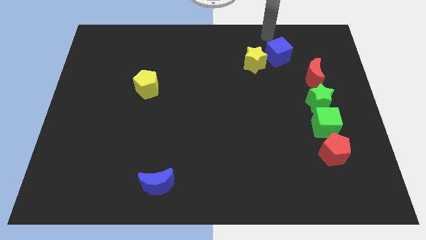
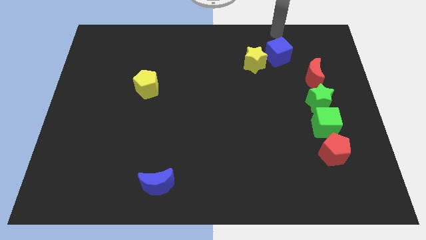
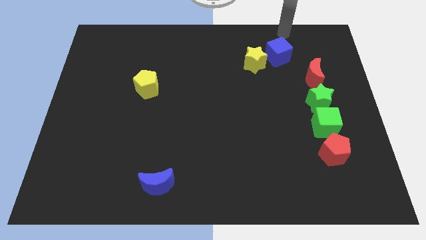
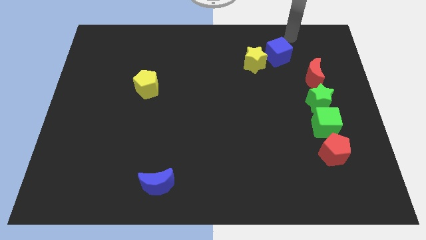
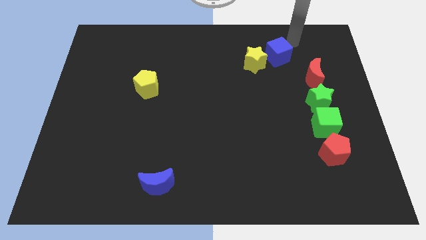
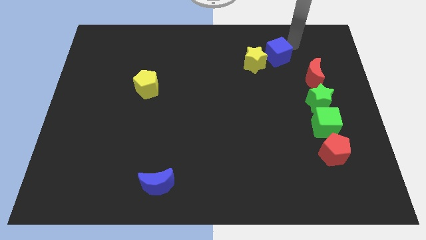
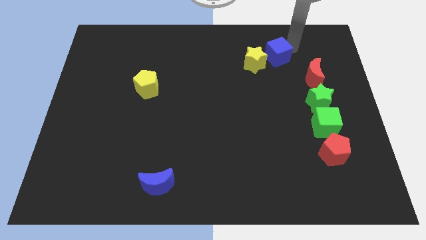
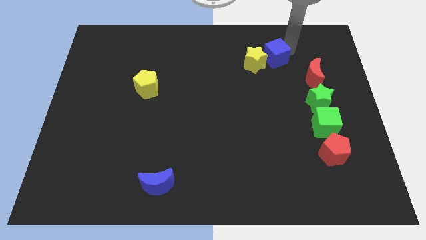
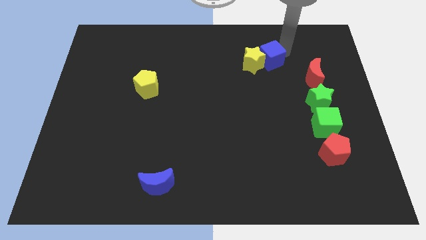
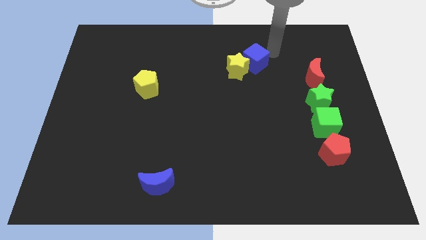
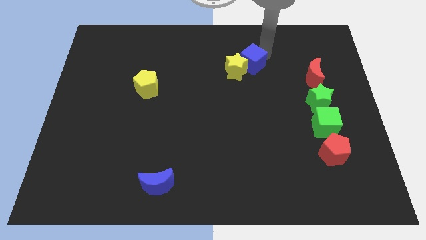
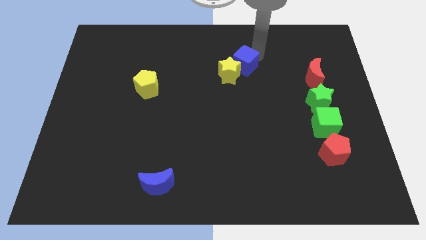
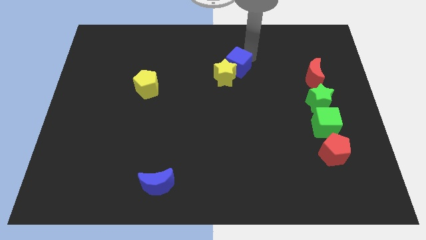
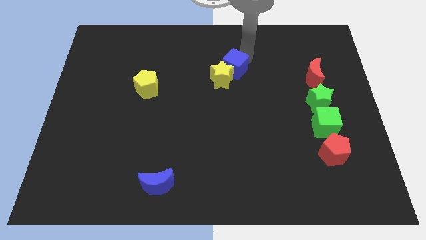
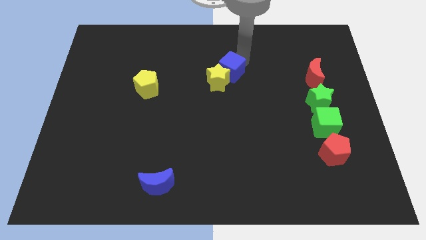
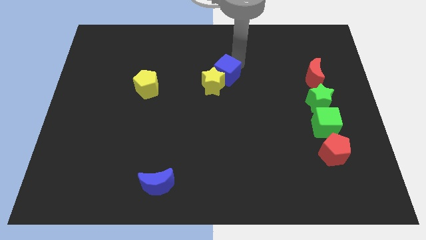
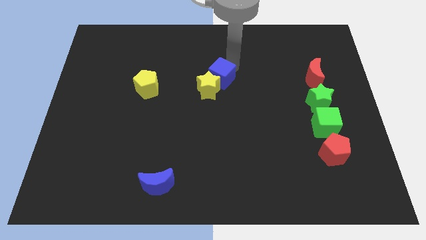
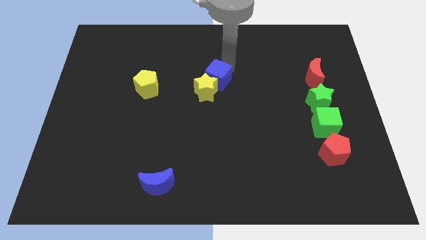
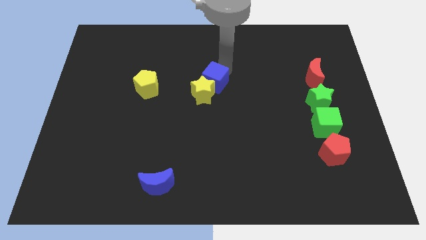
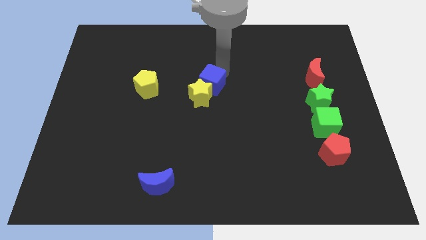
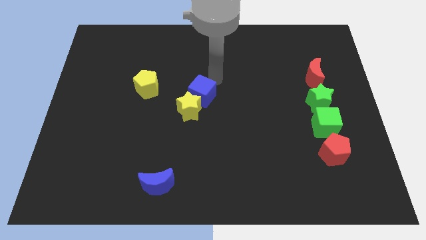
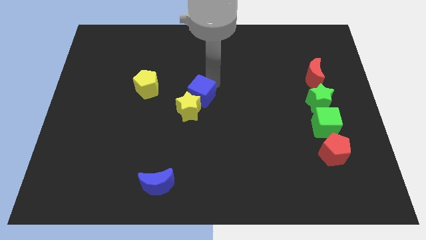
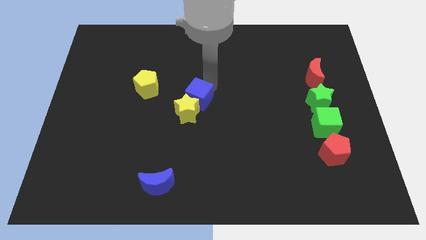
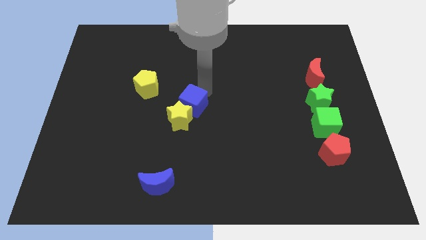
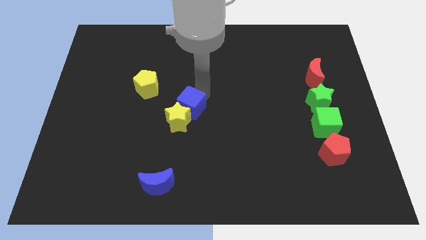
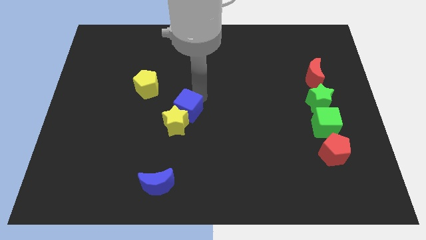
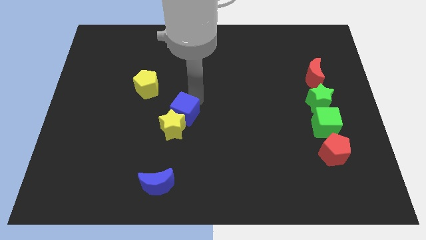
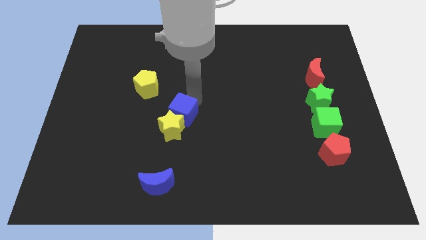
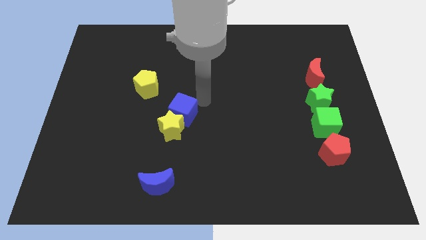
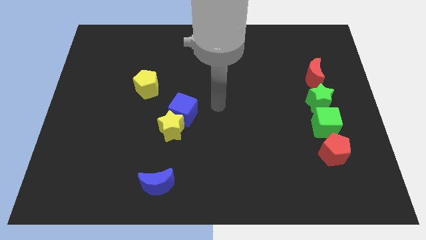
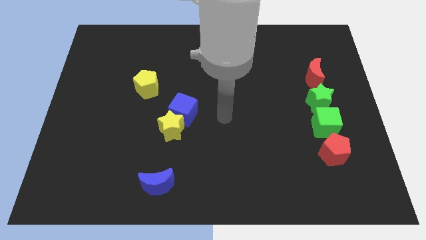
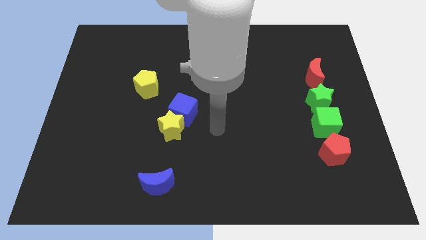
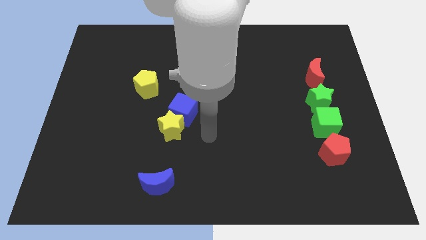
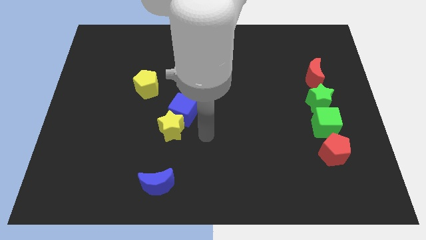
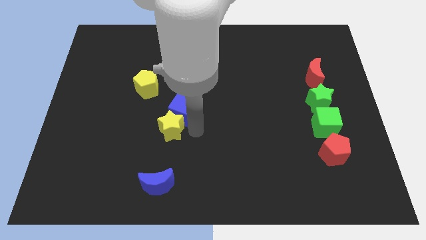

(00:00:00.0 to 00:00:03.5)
push the blue cube and yellow star towards the bottom left corner of the board

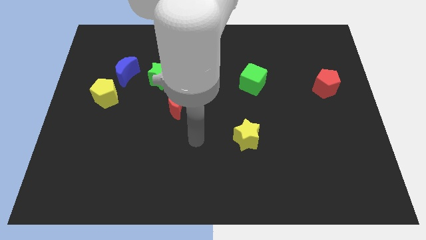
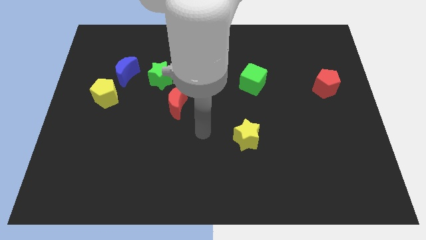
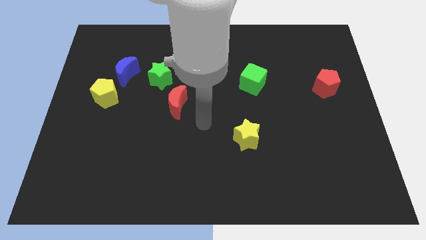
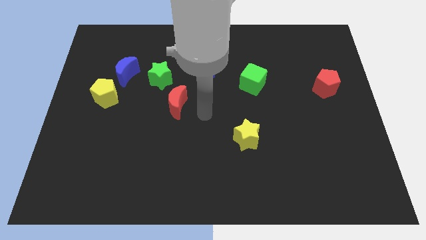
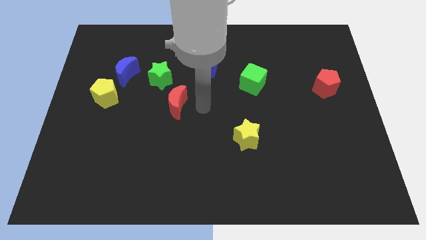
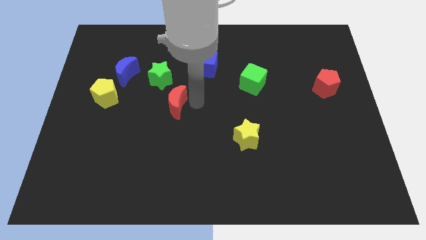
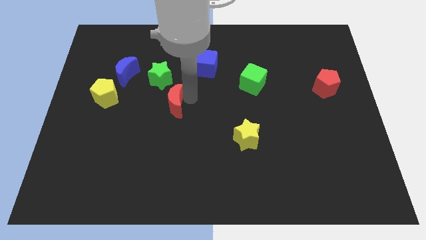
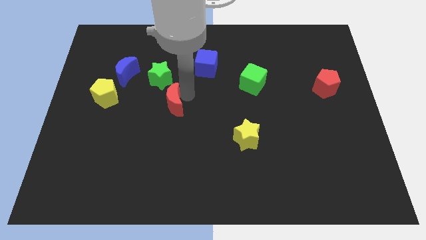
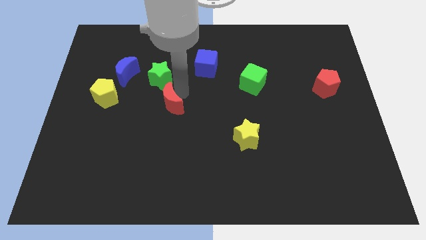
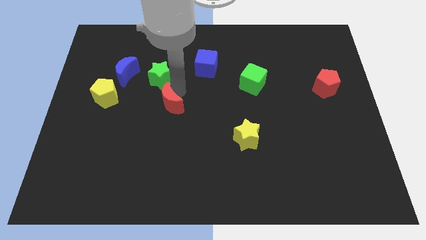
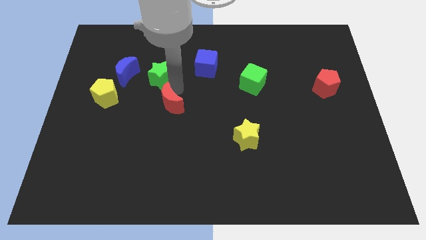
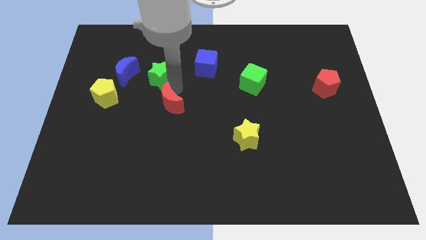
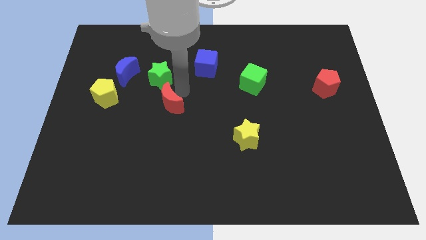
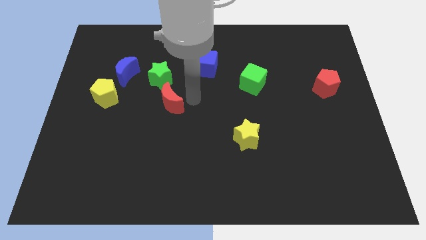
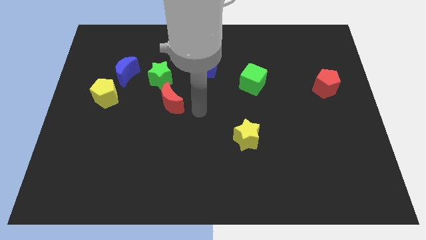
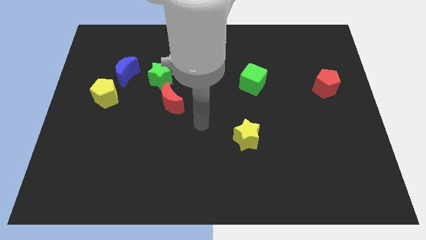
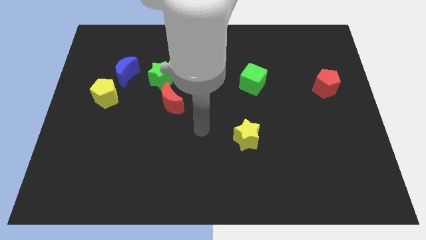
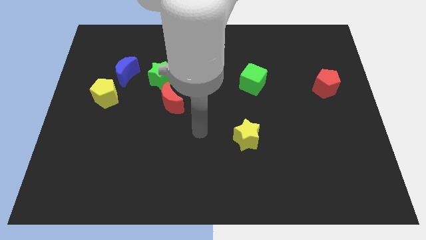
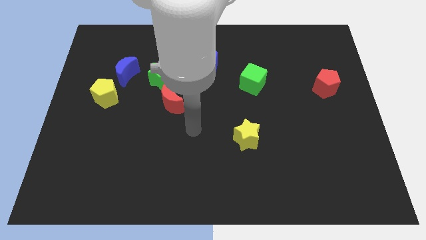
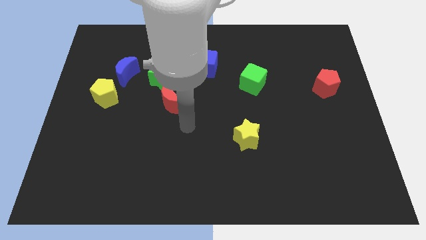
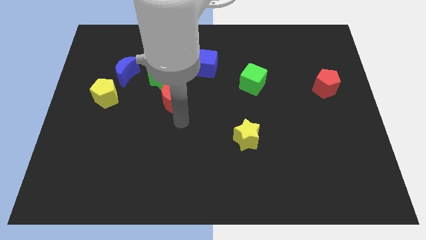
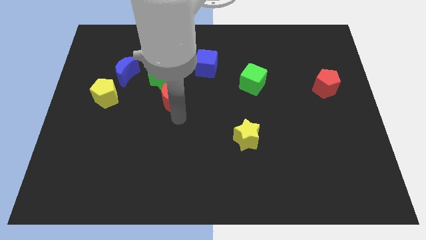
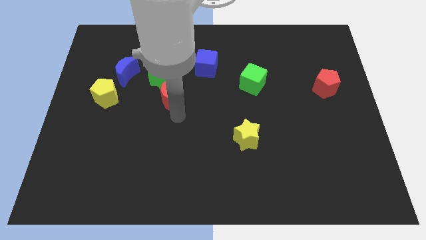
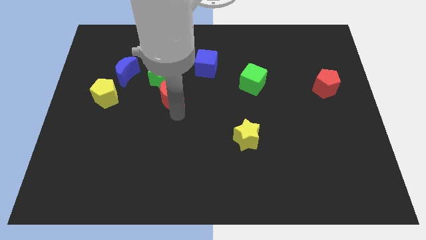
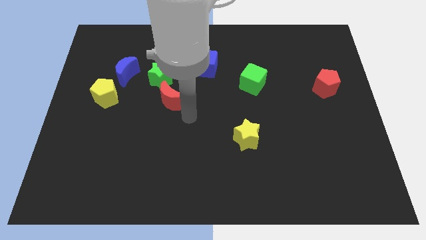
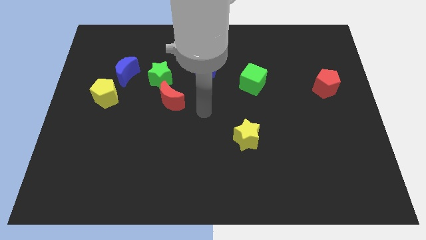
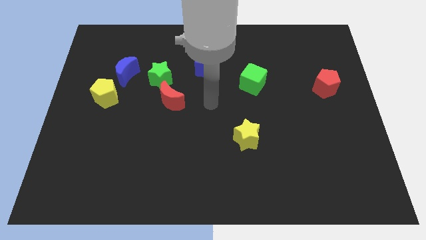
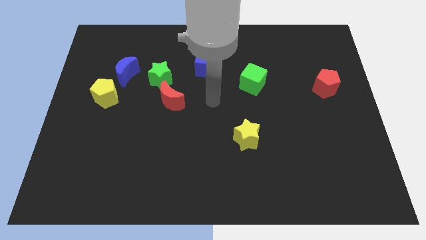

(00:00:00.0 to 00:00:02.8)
drag the red crescent to the bottom right side of the green star

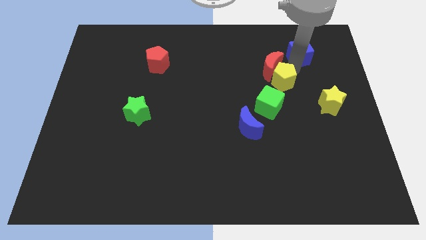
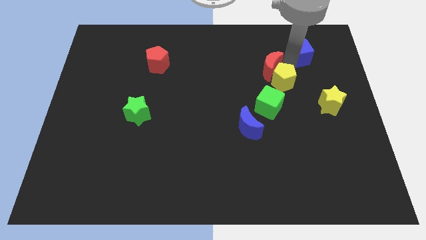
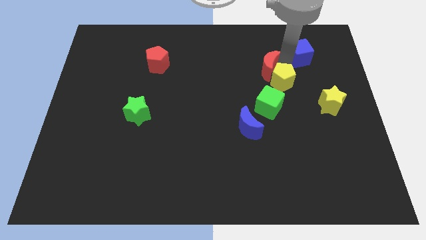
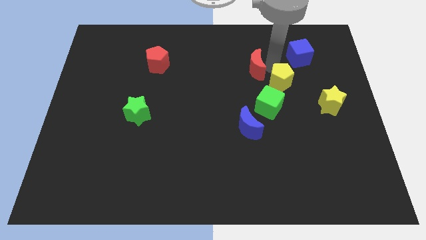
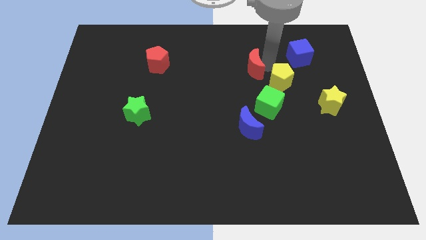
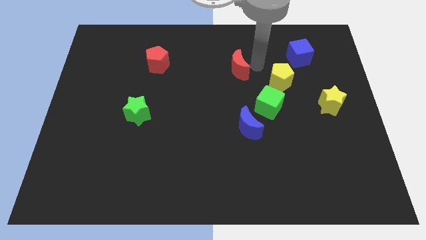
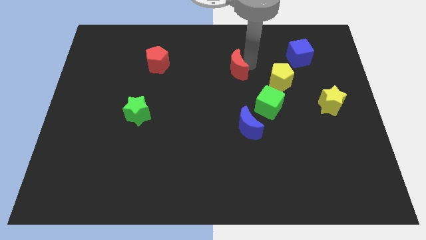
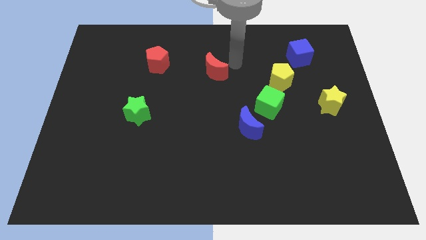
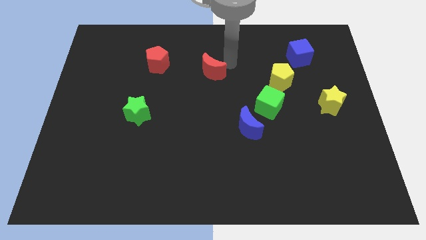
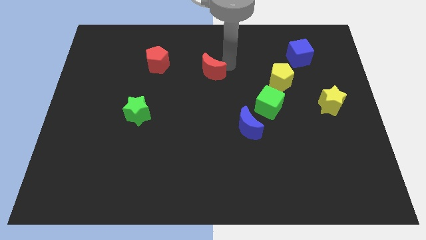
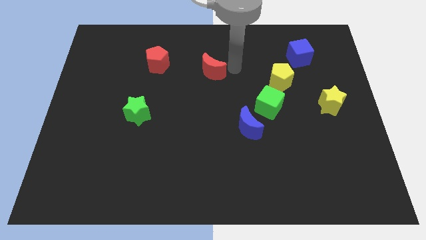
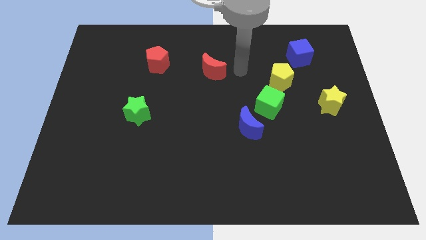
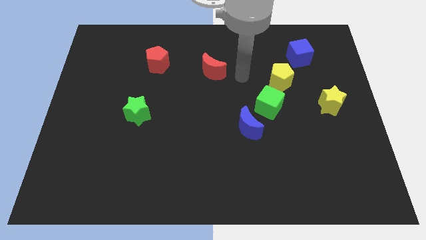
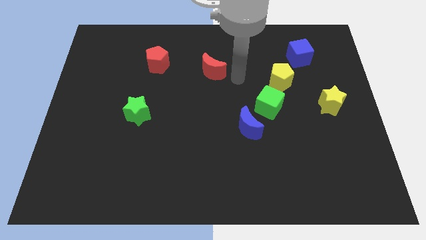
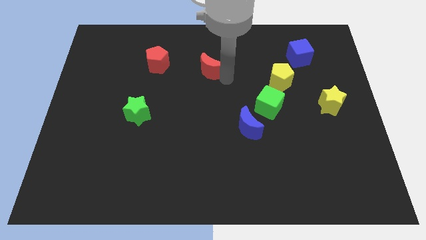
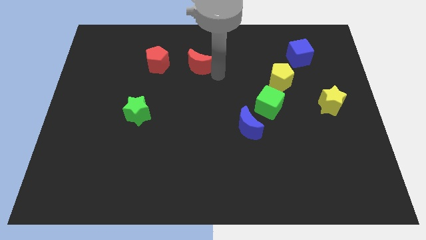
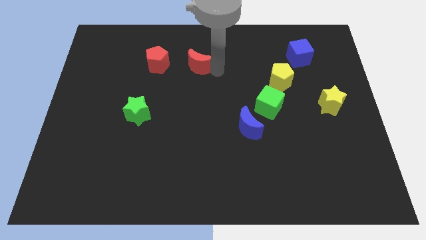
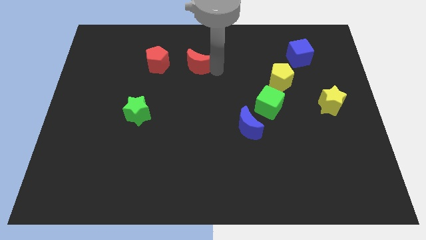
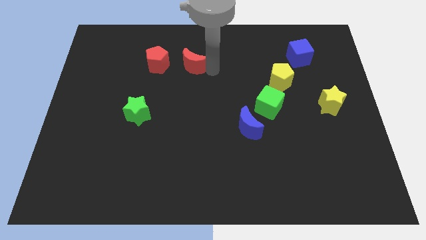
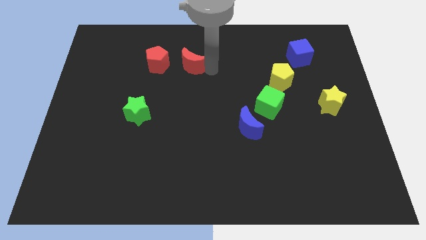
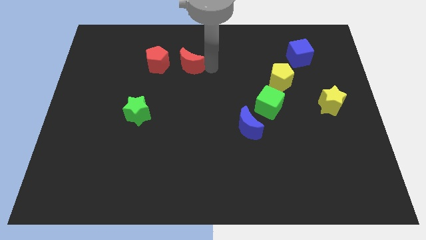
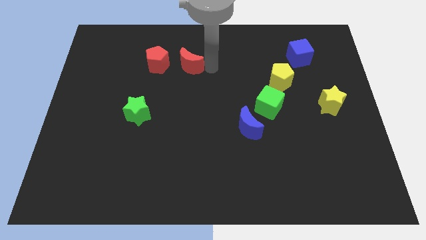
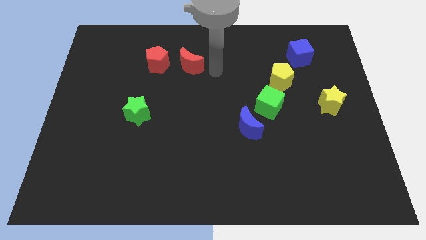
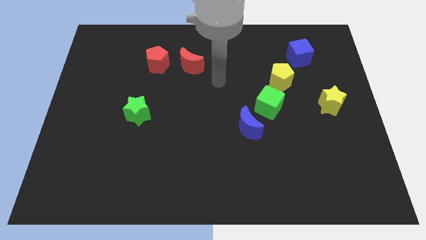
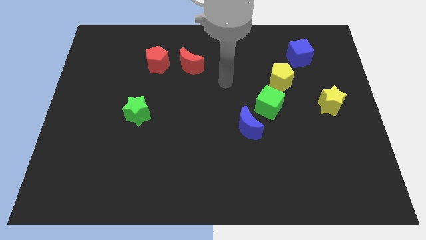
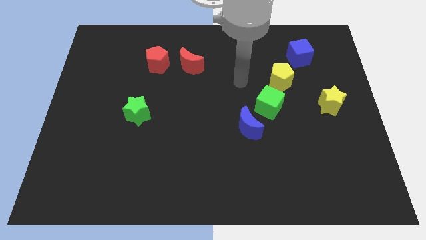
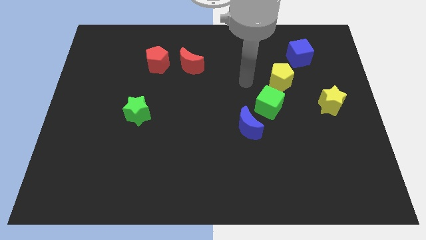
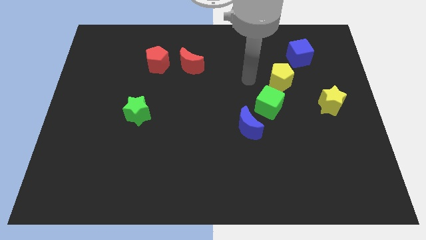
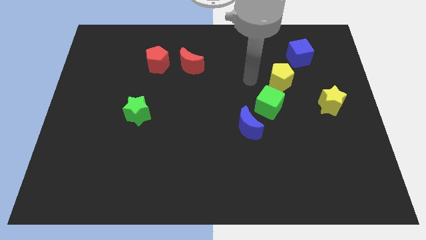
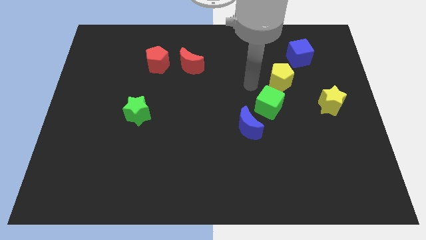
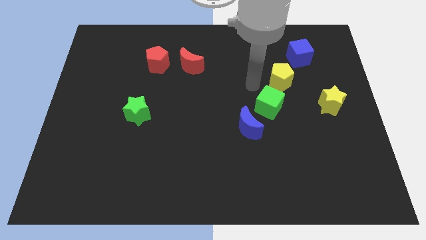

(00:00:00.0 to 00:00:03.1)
place the red moon right of the red pentagon
